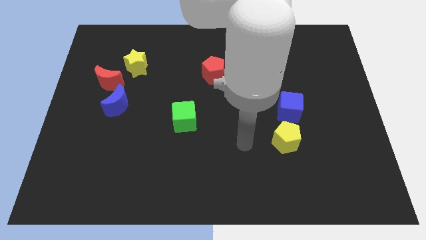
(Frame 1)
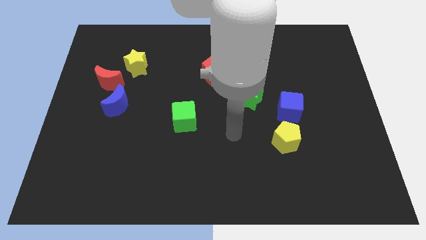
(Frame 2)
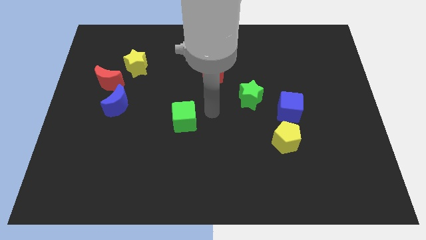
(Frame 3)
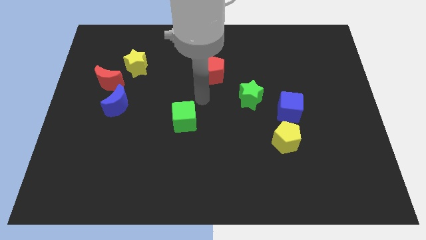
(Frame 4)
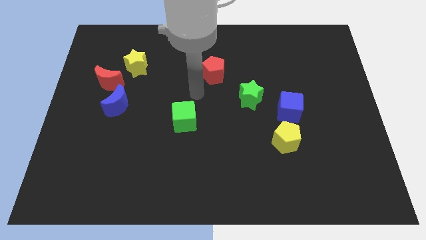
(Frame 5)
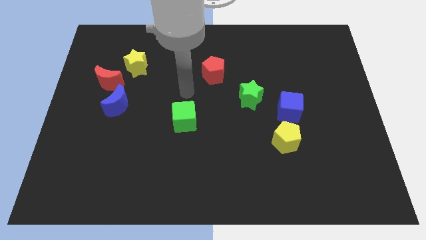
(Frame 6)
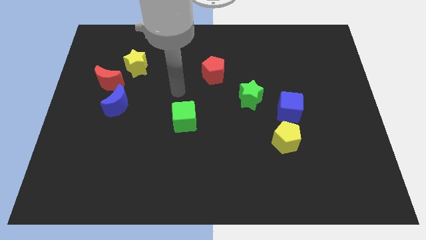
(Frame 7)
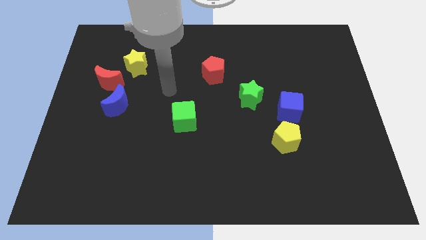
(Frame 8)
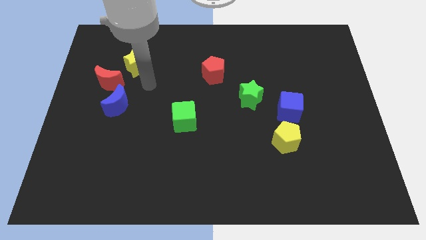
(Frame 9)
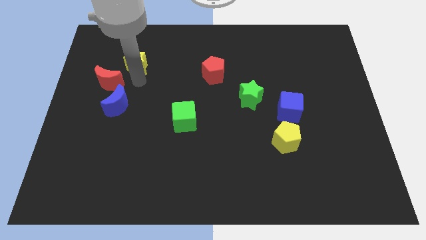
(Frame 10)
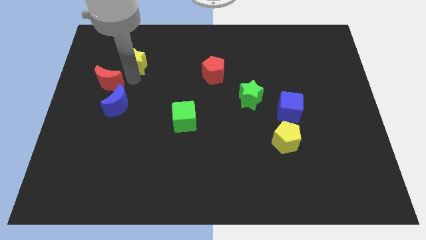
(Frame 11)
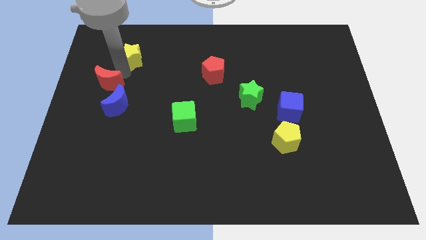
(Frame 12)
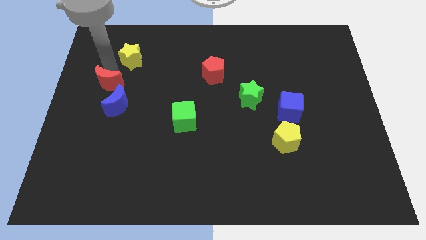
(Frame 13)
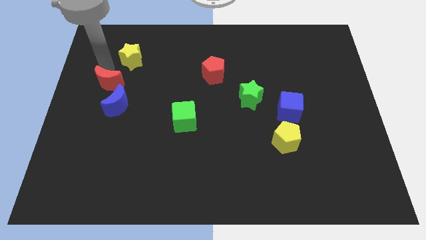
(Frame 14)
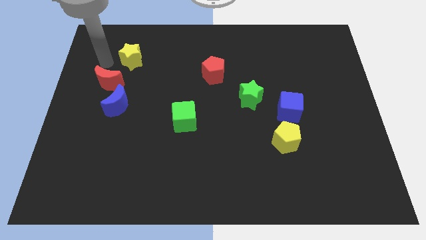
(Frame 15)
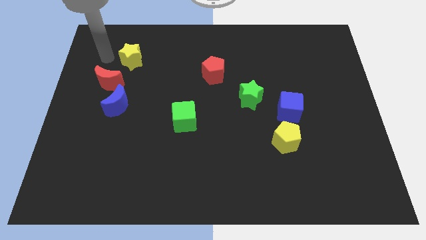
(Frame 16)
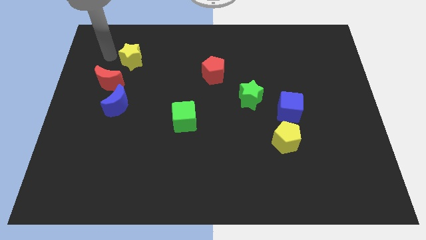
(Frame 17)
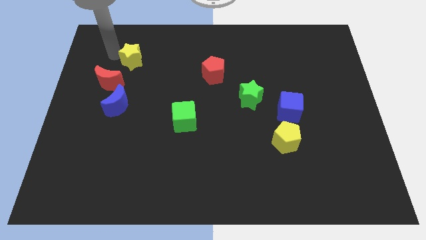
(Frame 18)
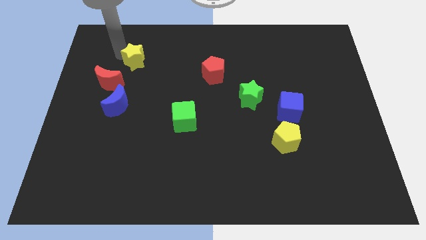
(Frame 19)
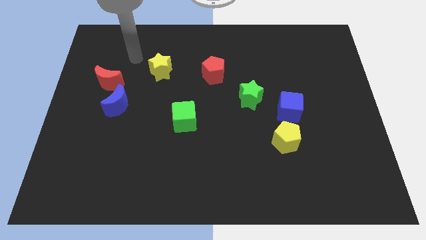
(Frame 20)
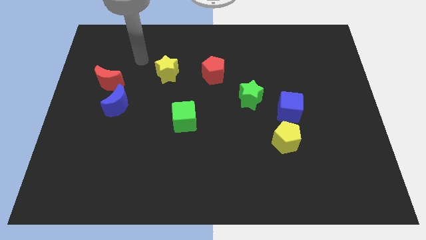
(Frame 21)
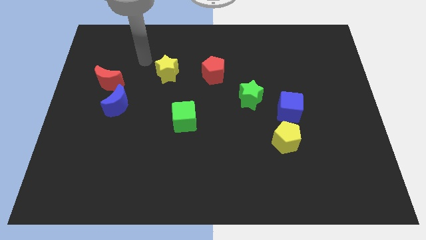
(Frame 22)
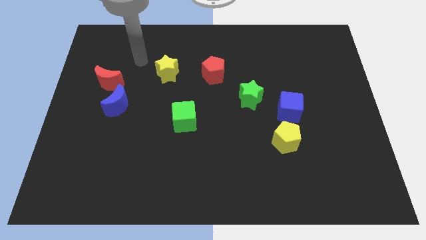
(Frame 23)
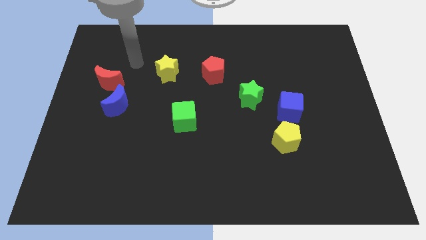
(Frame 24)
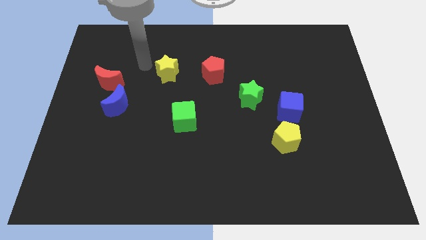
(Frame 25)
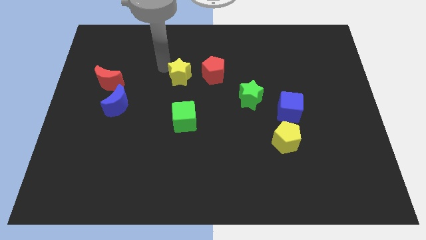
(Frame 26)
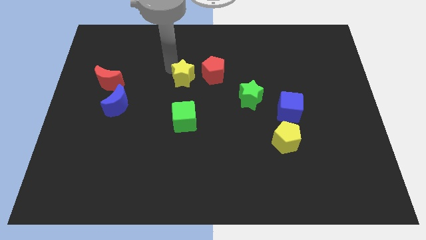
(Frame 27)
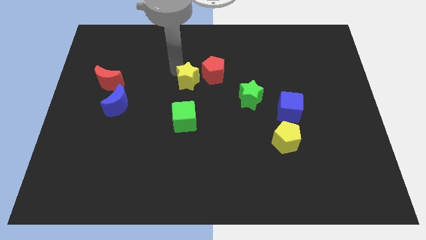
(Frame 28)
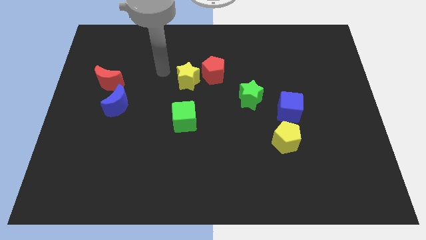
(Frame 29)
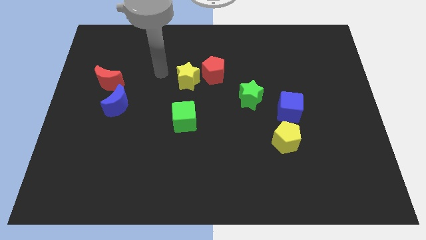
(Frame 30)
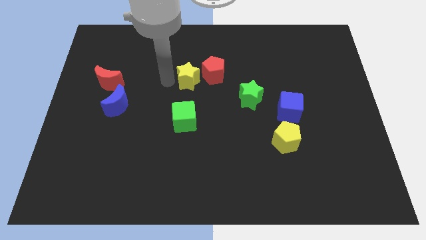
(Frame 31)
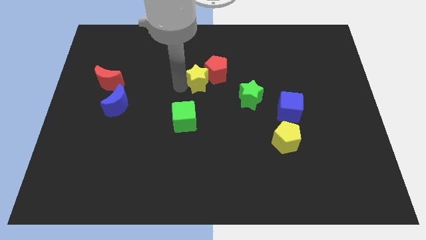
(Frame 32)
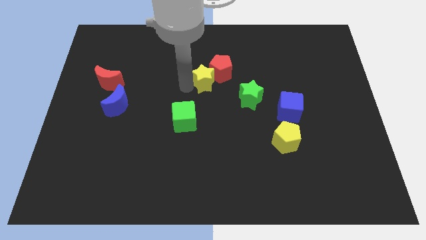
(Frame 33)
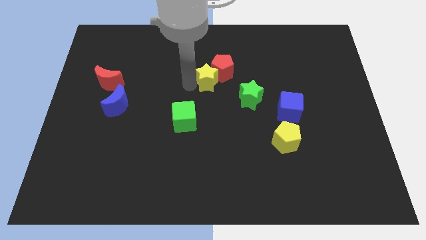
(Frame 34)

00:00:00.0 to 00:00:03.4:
push the yellow star towards the red pentagon

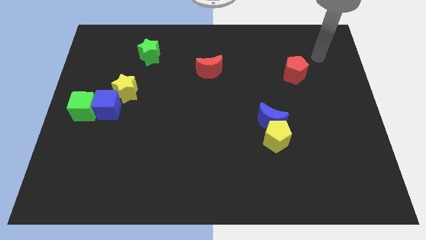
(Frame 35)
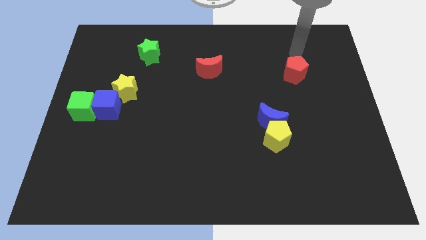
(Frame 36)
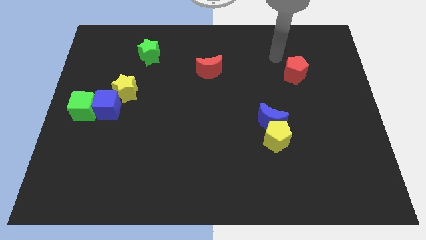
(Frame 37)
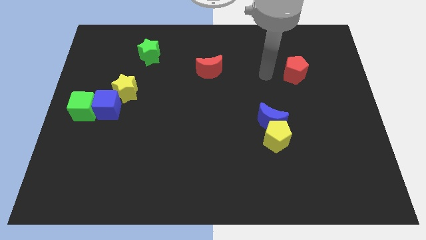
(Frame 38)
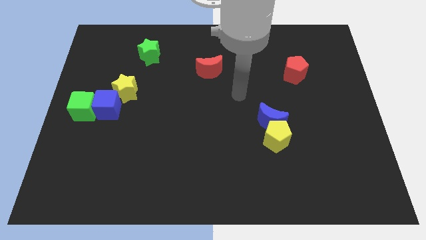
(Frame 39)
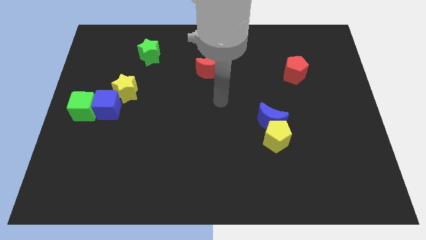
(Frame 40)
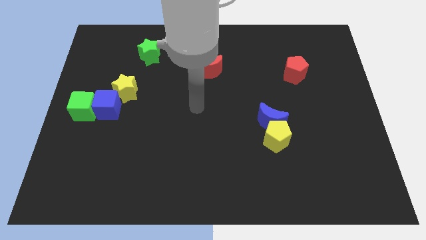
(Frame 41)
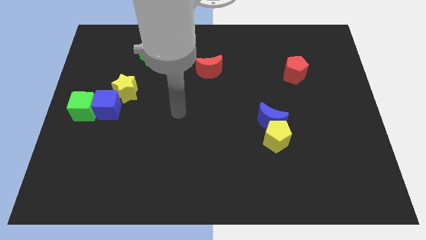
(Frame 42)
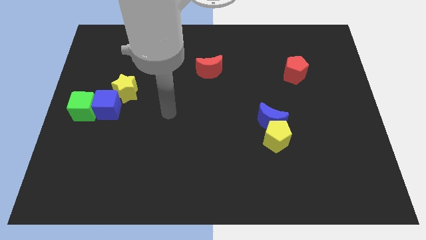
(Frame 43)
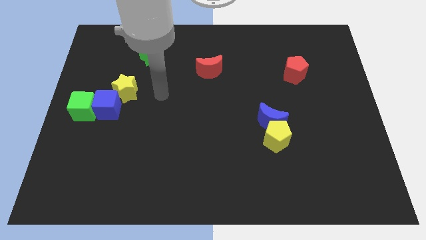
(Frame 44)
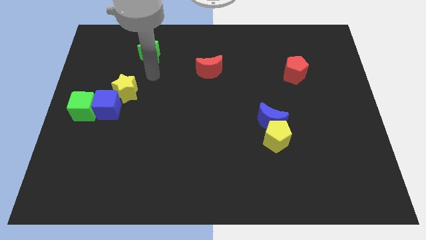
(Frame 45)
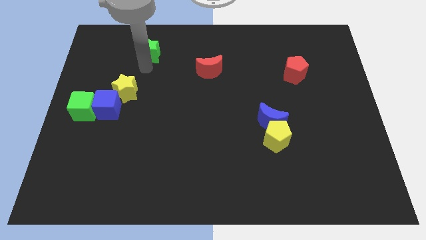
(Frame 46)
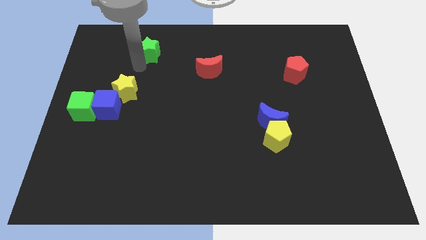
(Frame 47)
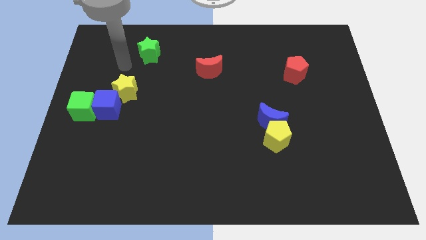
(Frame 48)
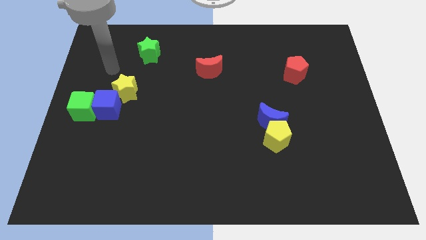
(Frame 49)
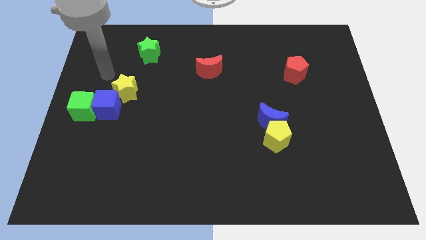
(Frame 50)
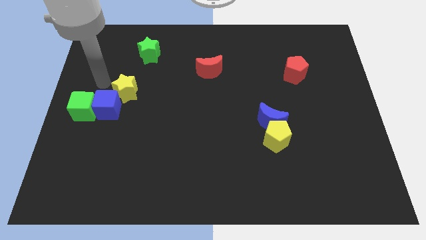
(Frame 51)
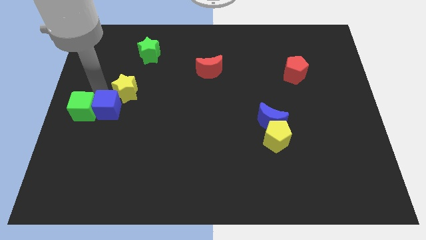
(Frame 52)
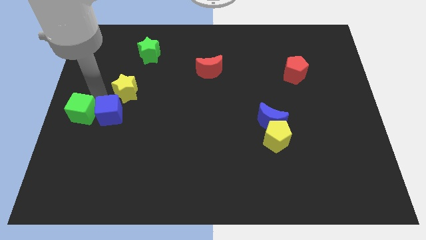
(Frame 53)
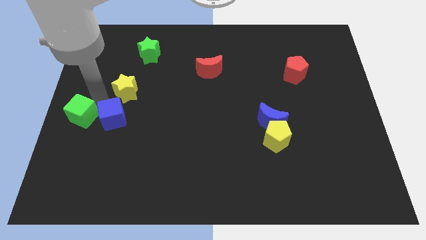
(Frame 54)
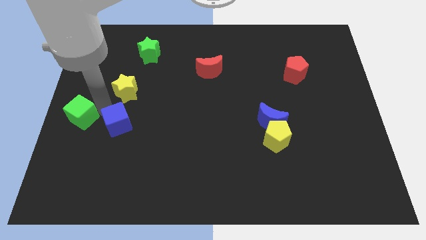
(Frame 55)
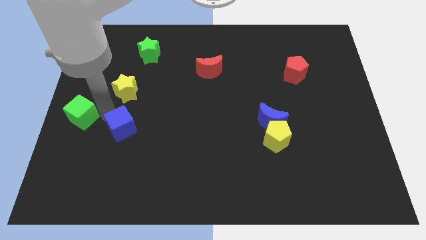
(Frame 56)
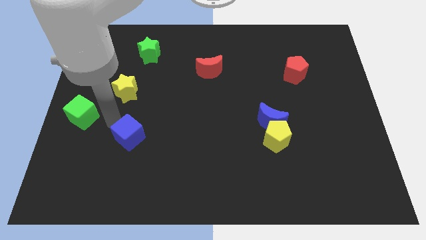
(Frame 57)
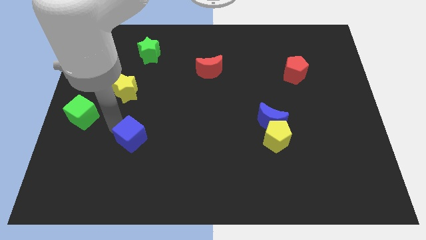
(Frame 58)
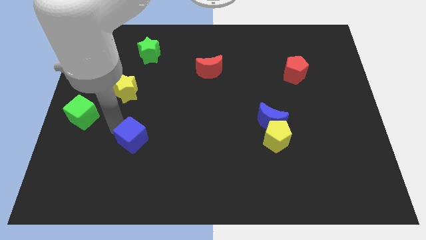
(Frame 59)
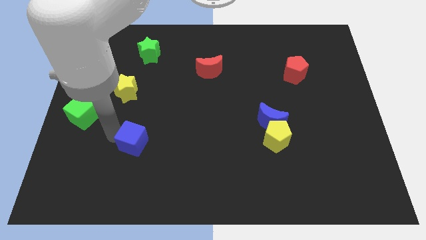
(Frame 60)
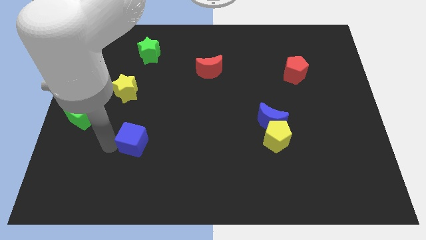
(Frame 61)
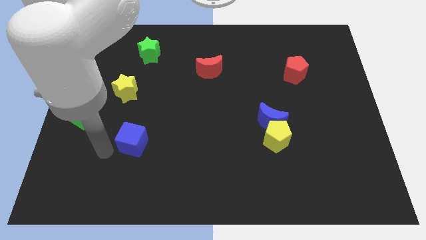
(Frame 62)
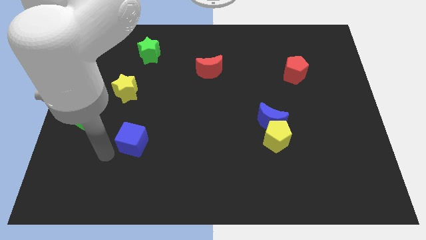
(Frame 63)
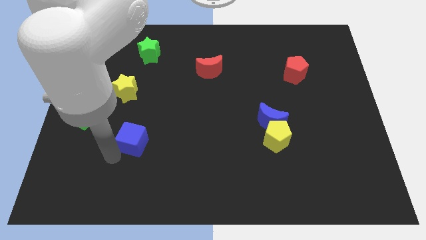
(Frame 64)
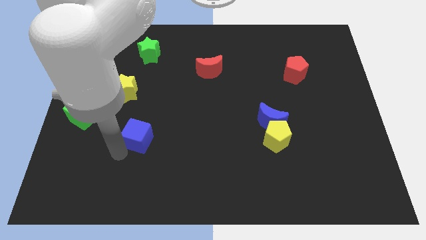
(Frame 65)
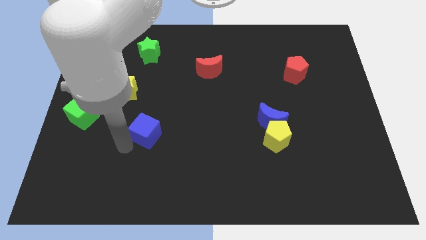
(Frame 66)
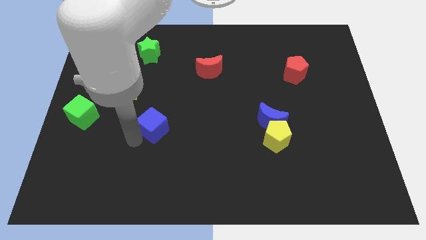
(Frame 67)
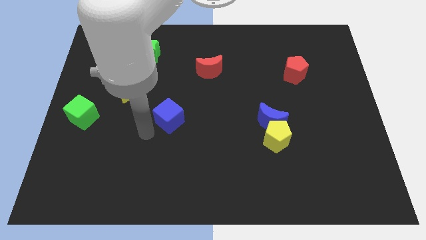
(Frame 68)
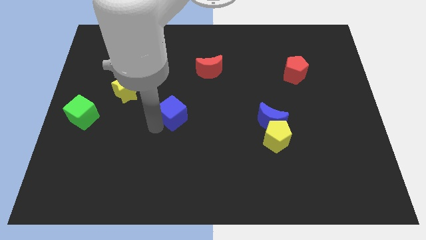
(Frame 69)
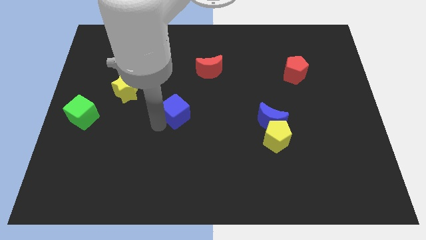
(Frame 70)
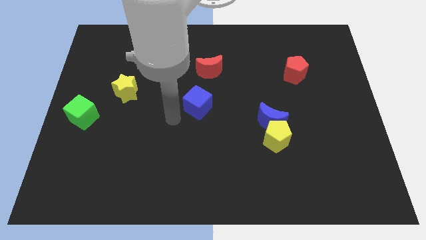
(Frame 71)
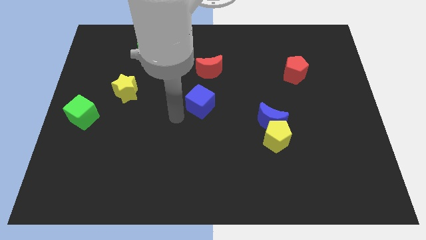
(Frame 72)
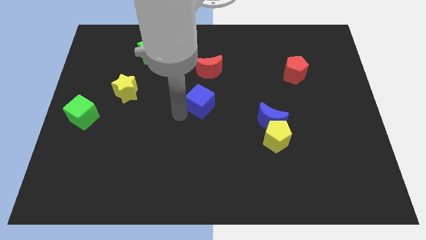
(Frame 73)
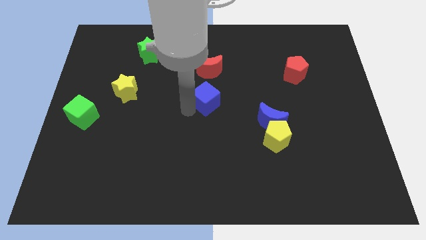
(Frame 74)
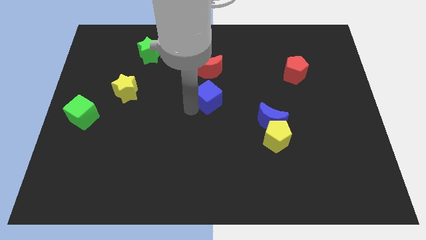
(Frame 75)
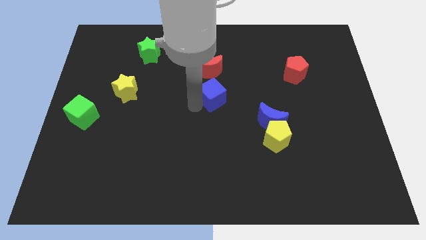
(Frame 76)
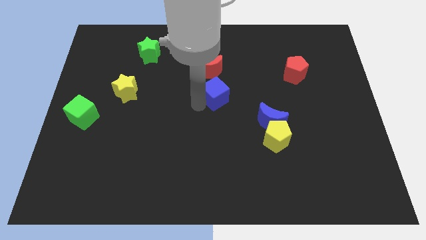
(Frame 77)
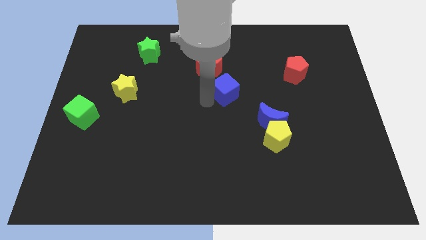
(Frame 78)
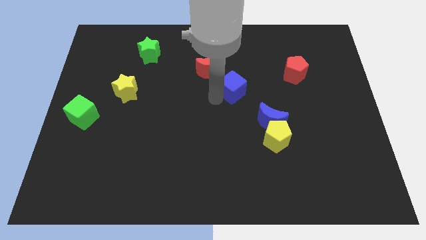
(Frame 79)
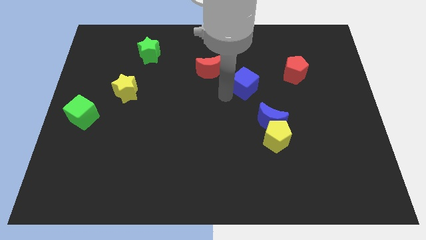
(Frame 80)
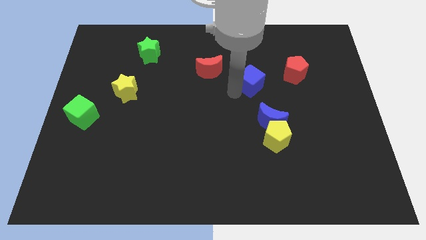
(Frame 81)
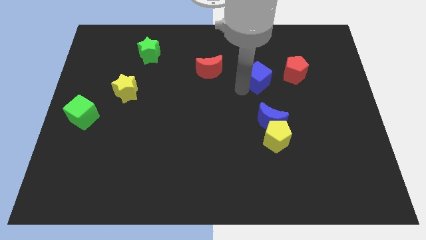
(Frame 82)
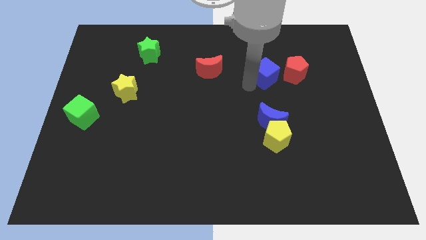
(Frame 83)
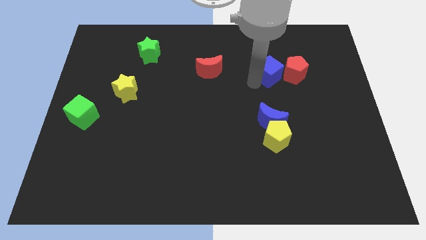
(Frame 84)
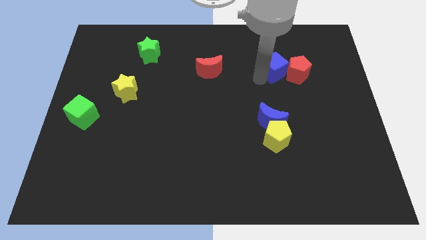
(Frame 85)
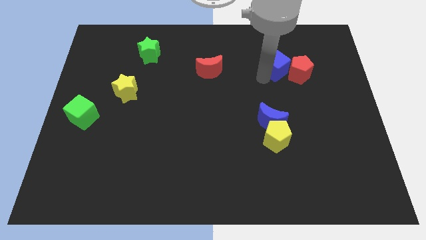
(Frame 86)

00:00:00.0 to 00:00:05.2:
put the blue cube next to the red pentagon
